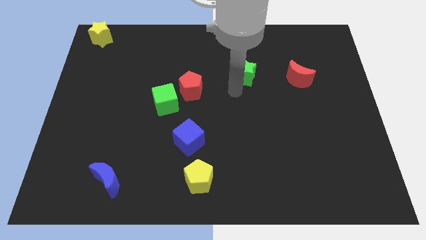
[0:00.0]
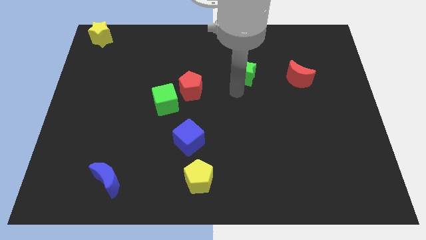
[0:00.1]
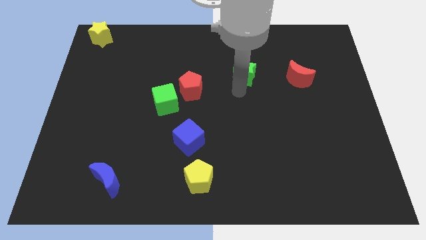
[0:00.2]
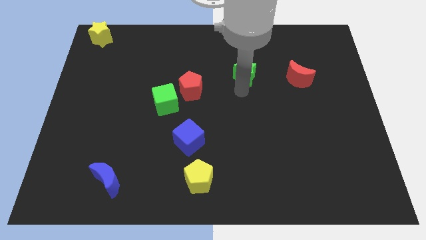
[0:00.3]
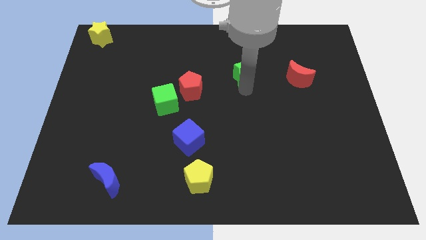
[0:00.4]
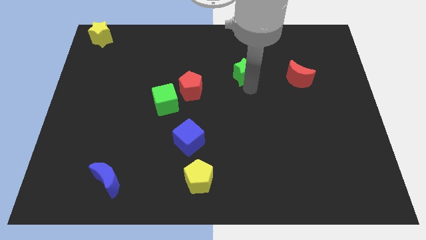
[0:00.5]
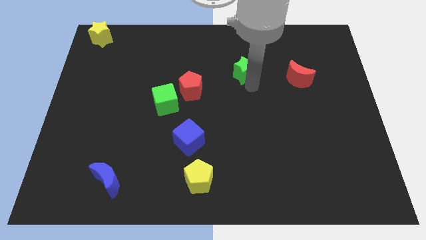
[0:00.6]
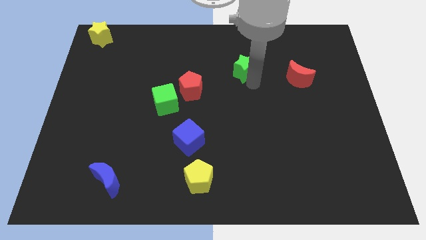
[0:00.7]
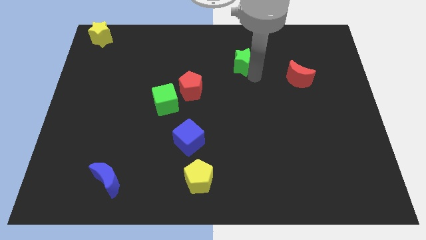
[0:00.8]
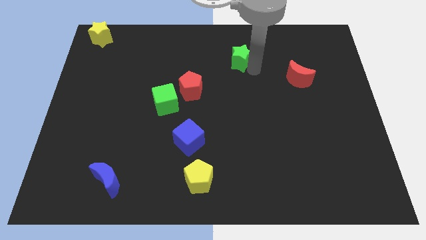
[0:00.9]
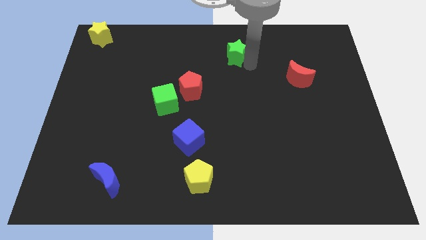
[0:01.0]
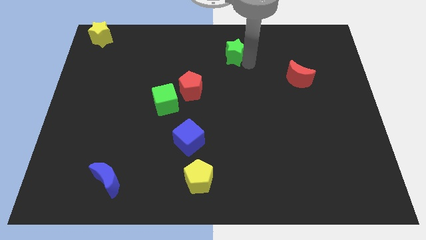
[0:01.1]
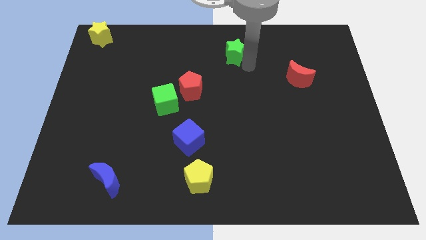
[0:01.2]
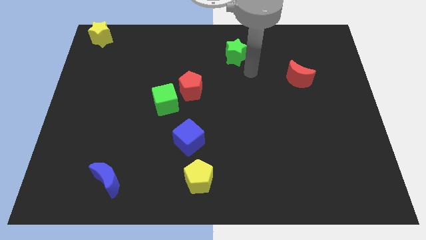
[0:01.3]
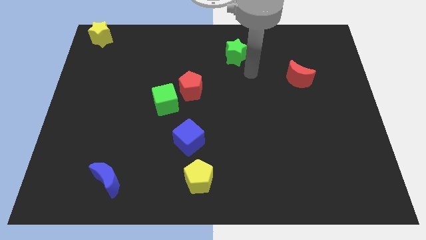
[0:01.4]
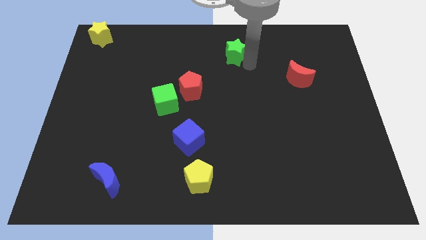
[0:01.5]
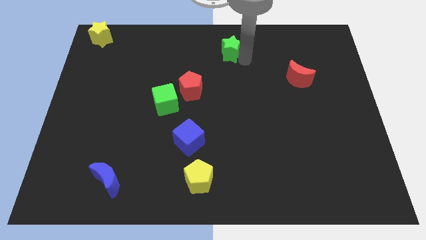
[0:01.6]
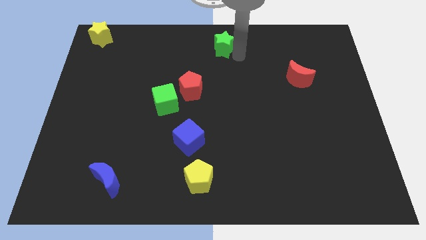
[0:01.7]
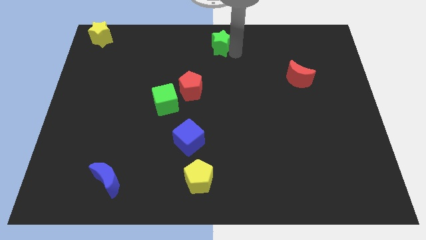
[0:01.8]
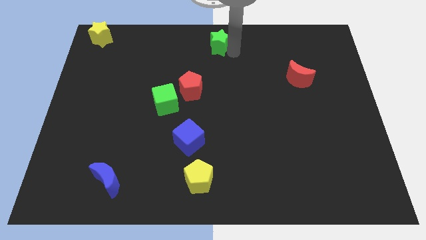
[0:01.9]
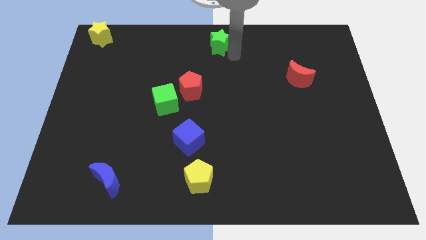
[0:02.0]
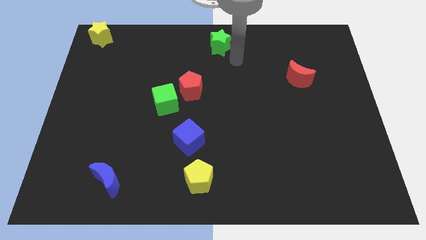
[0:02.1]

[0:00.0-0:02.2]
push green star to the top center

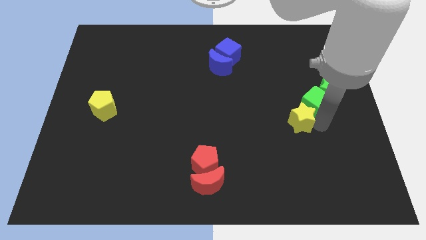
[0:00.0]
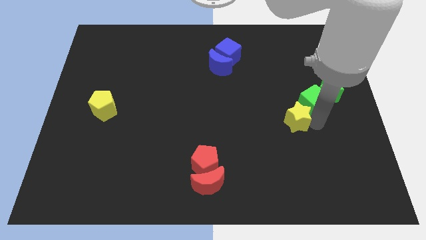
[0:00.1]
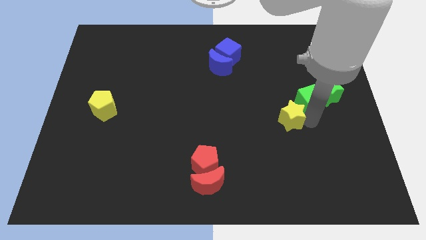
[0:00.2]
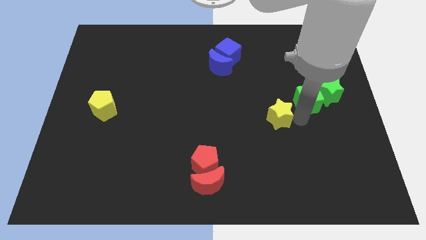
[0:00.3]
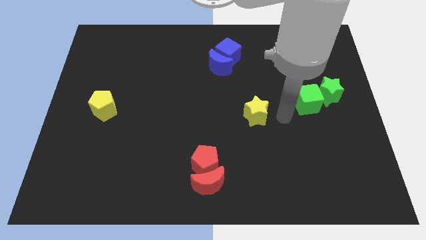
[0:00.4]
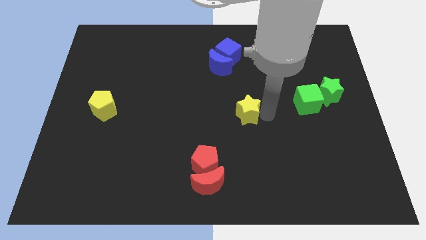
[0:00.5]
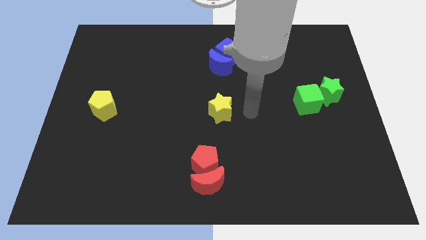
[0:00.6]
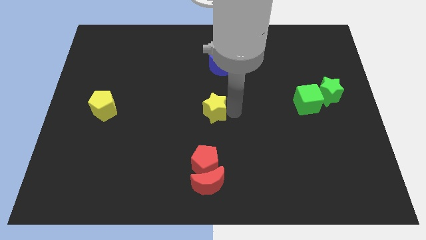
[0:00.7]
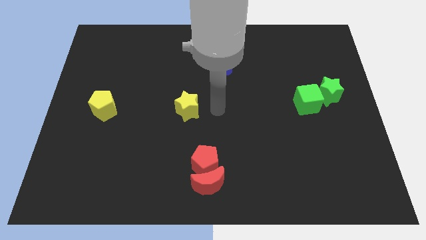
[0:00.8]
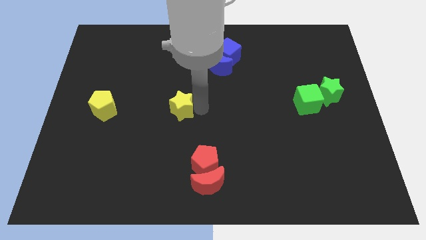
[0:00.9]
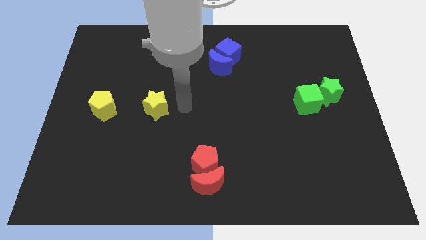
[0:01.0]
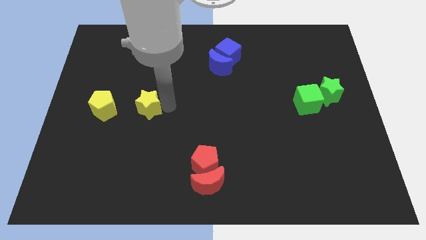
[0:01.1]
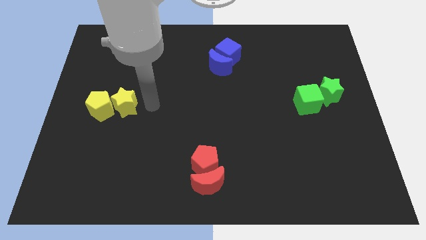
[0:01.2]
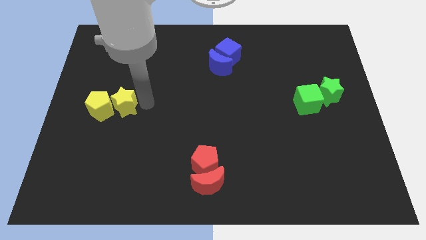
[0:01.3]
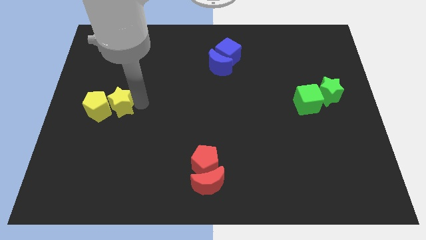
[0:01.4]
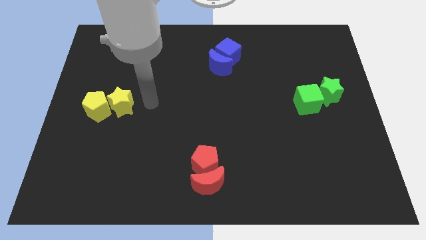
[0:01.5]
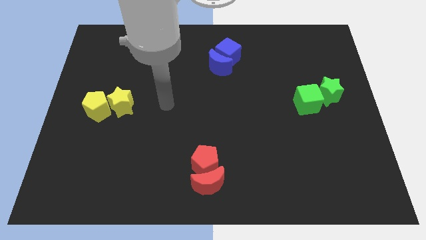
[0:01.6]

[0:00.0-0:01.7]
move the yellow star to the top right of the yellow pentagon

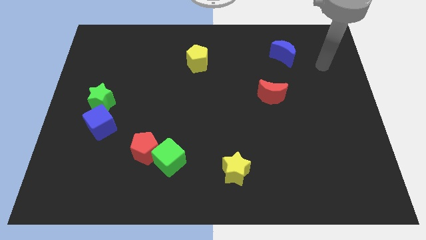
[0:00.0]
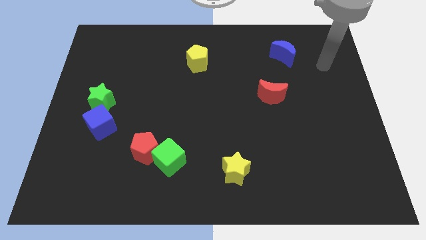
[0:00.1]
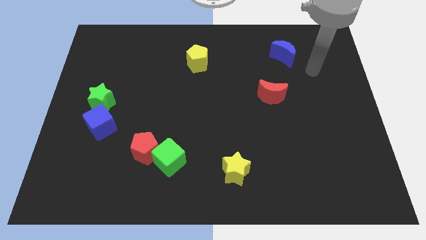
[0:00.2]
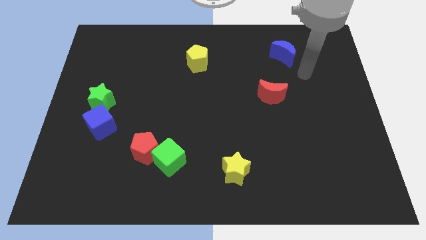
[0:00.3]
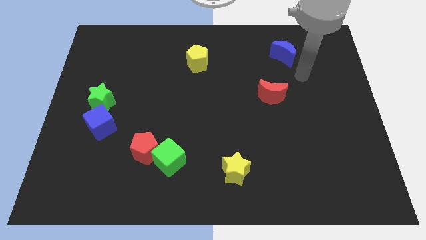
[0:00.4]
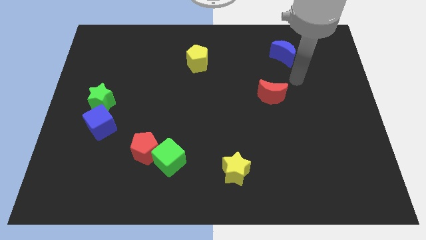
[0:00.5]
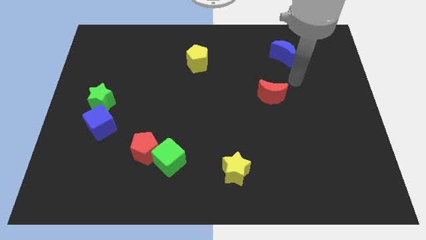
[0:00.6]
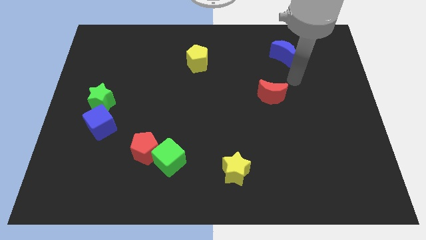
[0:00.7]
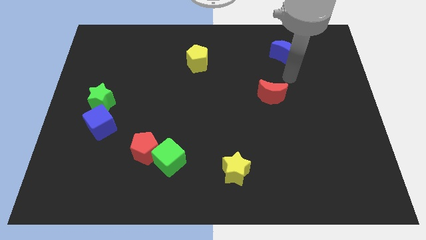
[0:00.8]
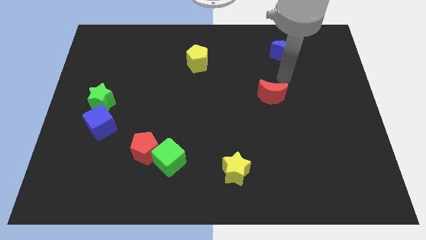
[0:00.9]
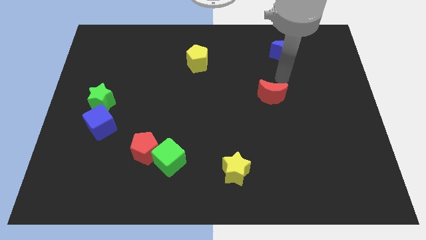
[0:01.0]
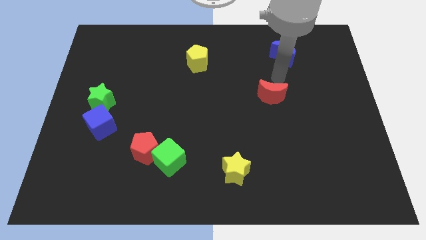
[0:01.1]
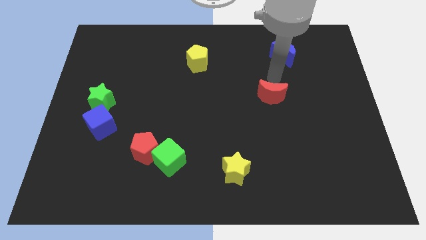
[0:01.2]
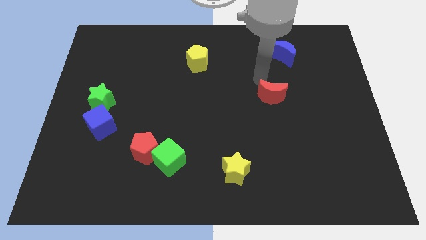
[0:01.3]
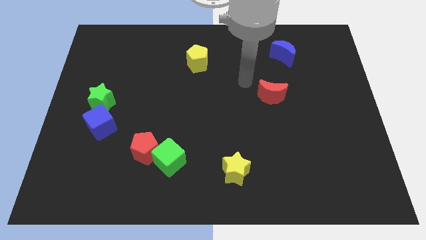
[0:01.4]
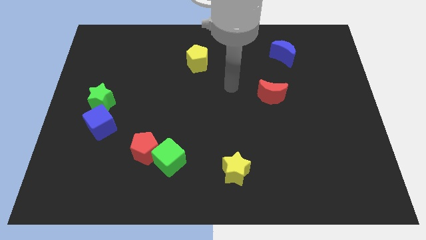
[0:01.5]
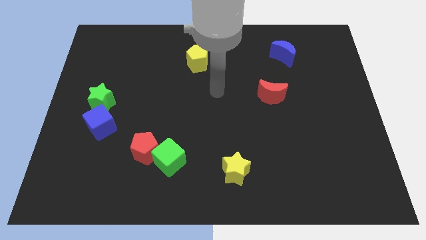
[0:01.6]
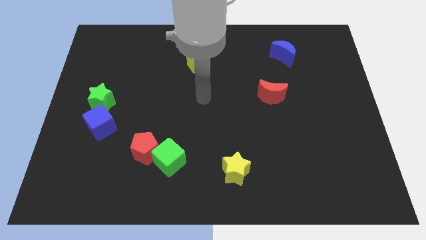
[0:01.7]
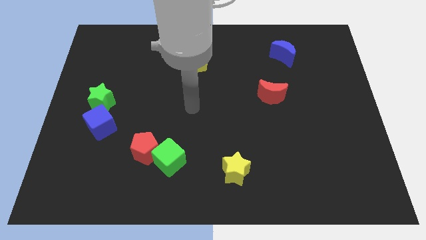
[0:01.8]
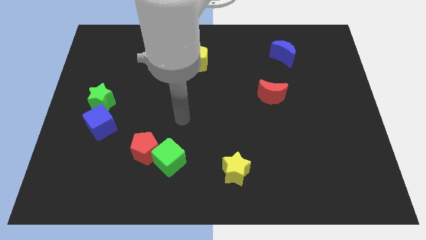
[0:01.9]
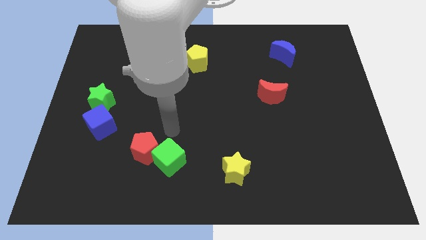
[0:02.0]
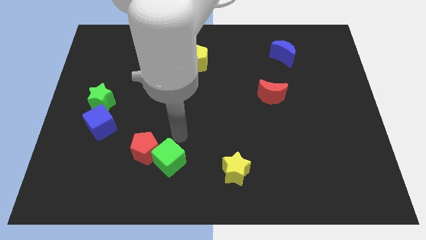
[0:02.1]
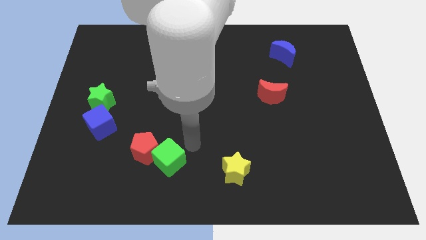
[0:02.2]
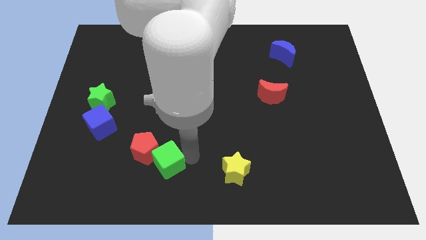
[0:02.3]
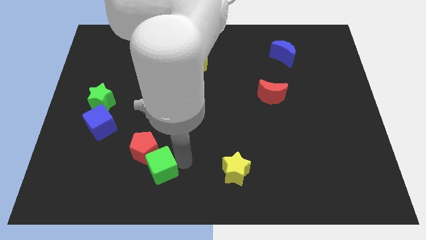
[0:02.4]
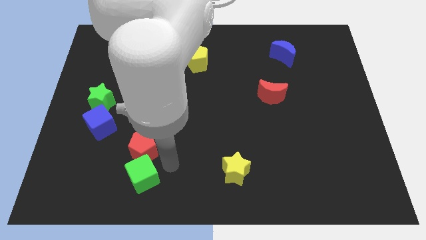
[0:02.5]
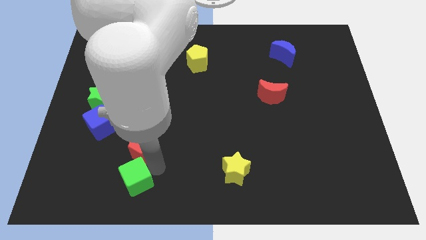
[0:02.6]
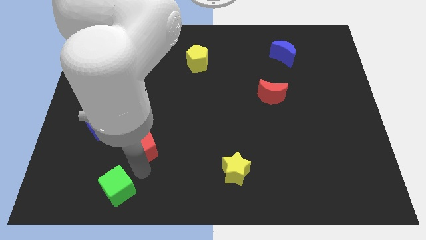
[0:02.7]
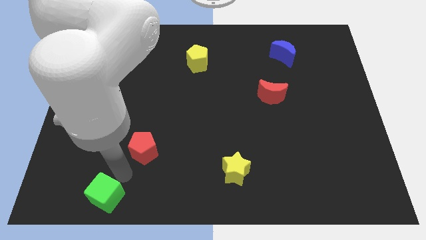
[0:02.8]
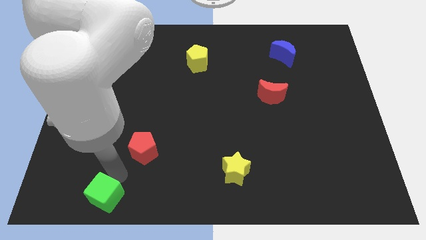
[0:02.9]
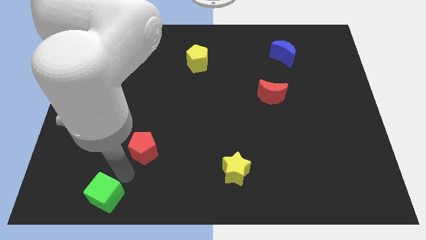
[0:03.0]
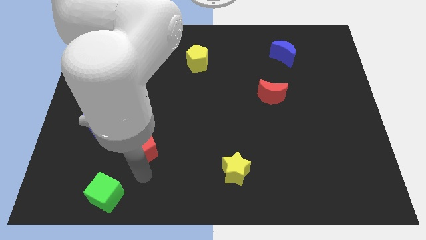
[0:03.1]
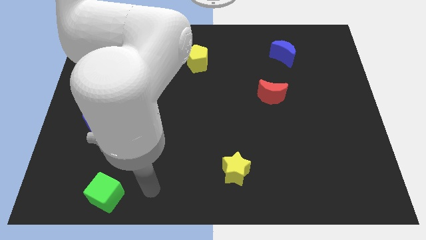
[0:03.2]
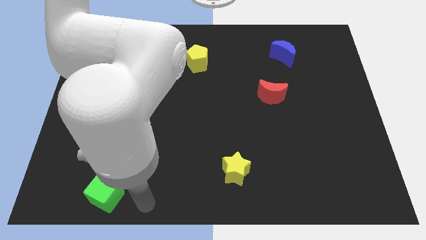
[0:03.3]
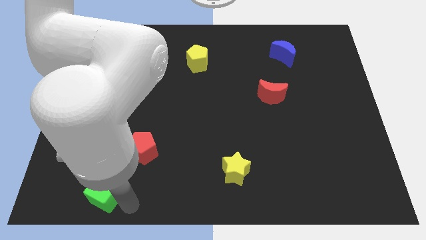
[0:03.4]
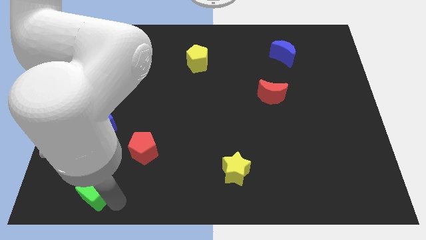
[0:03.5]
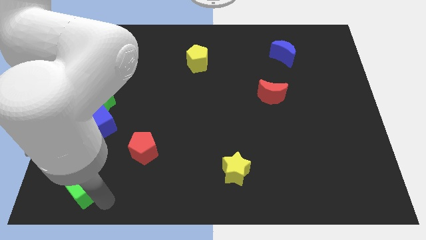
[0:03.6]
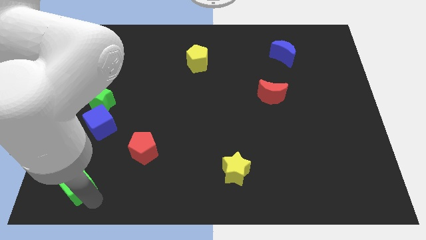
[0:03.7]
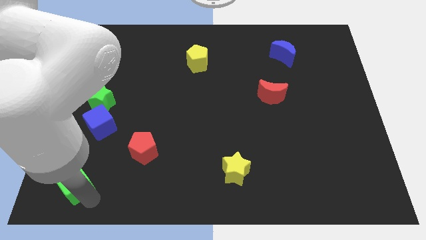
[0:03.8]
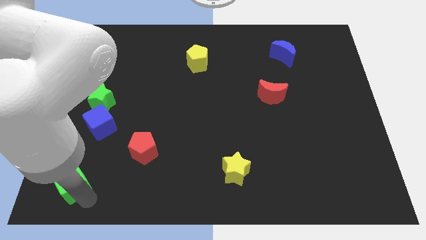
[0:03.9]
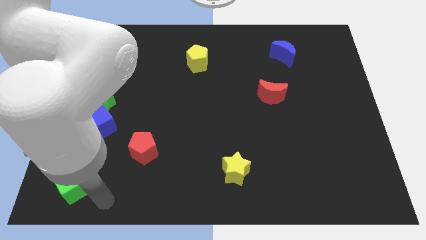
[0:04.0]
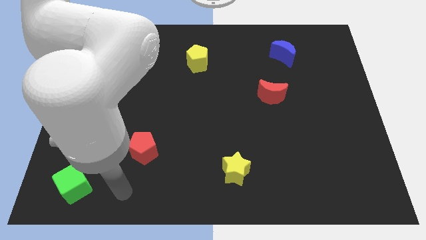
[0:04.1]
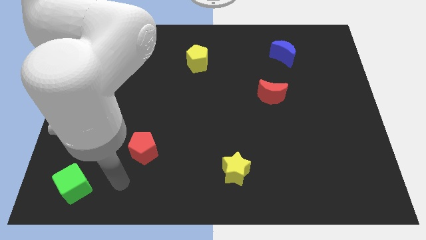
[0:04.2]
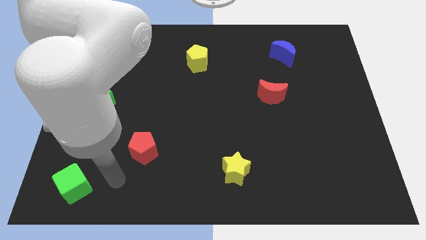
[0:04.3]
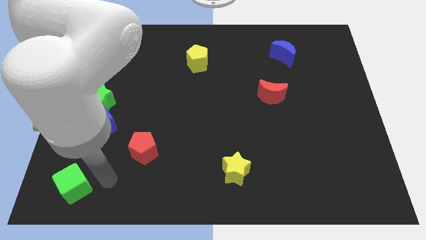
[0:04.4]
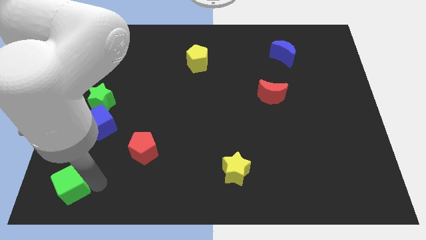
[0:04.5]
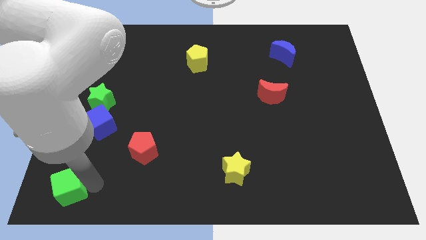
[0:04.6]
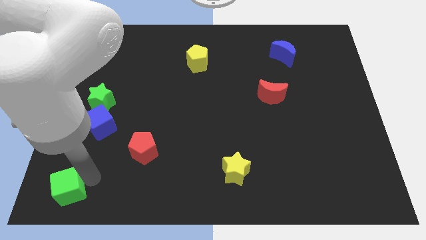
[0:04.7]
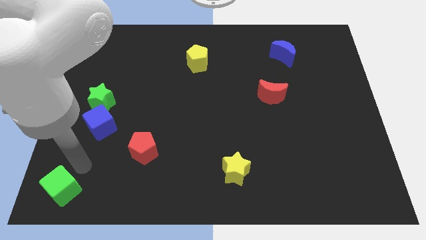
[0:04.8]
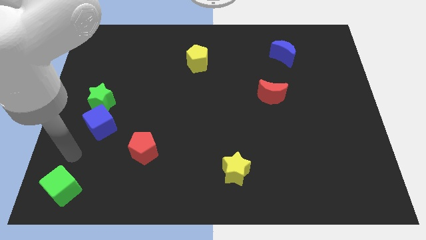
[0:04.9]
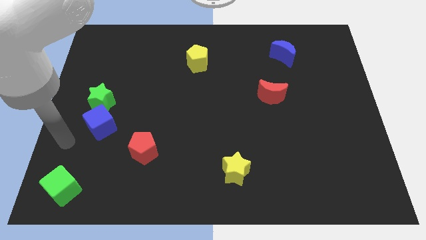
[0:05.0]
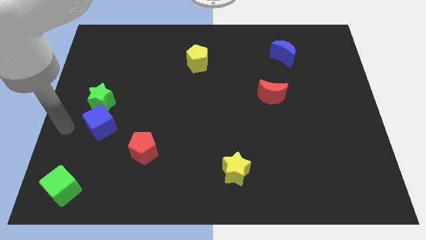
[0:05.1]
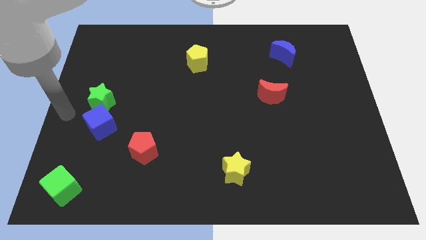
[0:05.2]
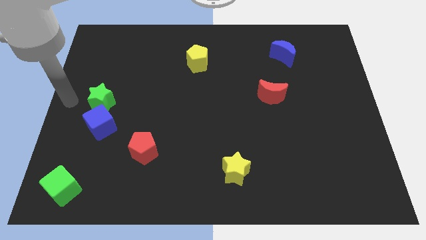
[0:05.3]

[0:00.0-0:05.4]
place the green cube to the bottom left of the board
